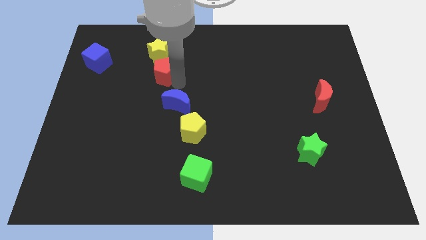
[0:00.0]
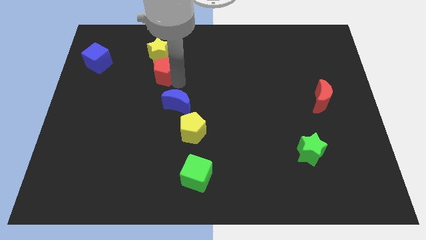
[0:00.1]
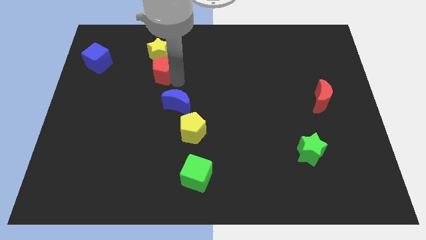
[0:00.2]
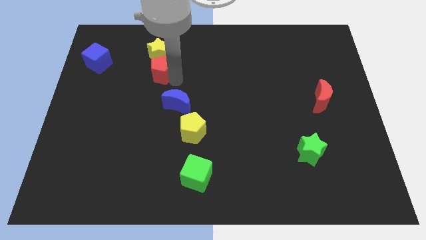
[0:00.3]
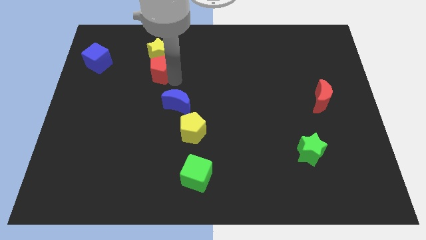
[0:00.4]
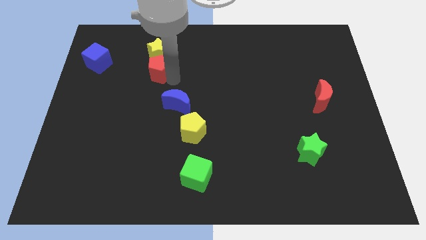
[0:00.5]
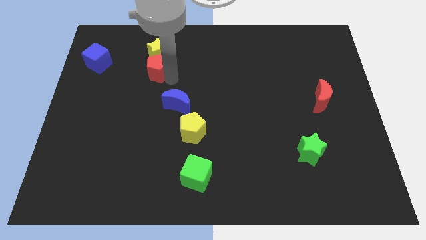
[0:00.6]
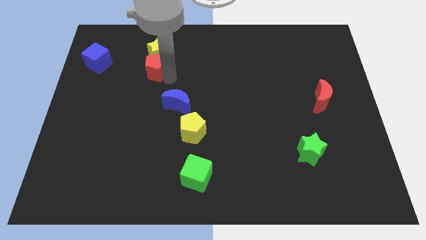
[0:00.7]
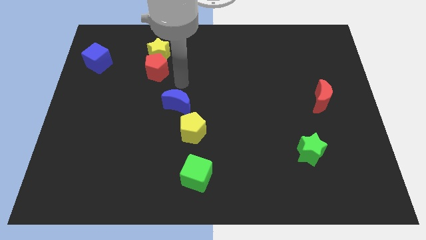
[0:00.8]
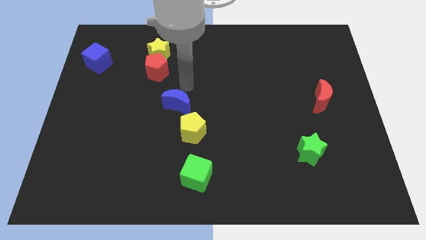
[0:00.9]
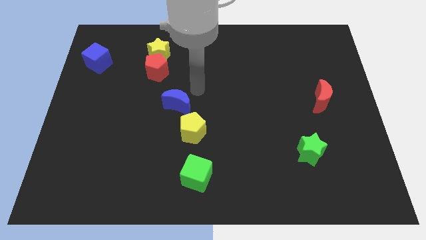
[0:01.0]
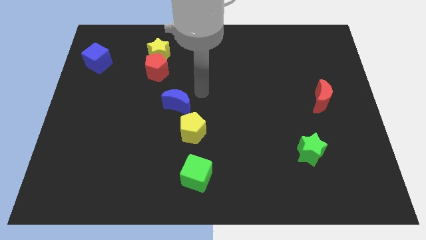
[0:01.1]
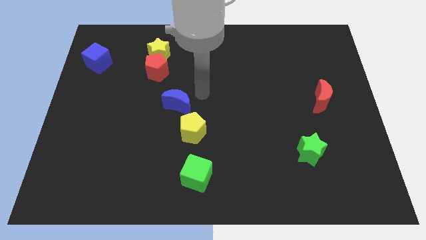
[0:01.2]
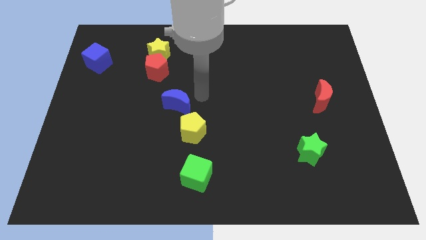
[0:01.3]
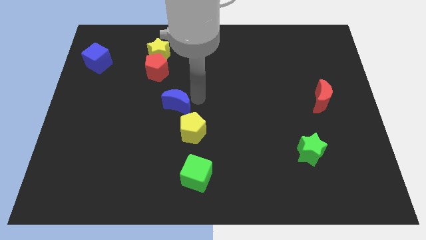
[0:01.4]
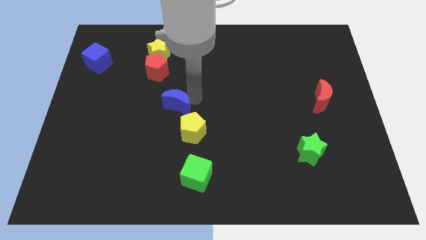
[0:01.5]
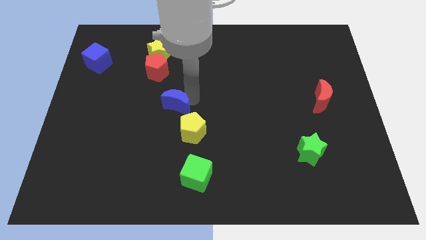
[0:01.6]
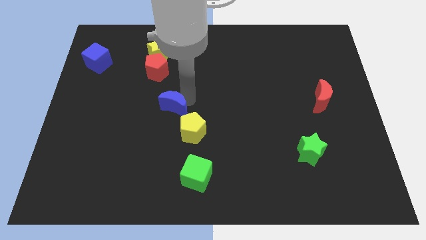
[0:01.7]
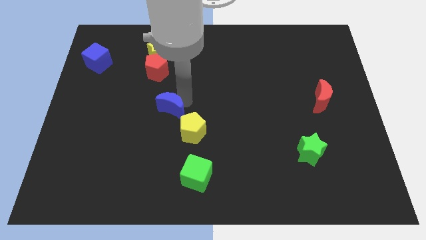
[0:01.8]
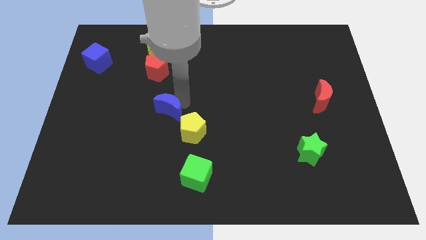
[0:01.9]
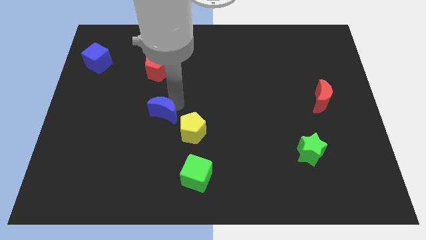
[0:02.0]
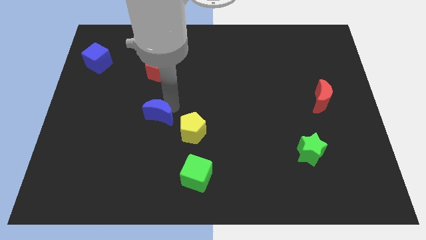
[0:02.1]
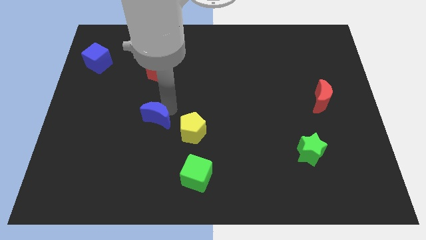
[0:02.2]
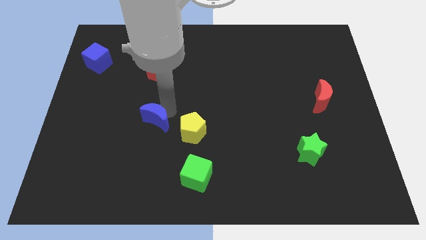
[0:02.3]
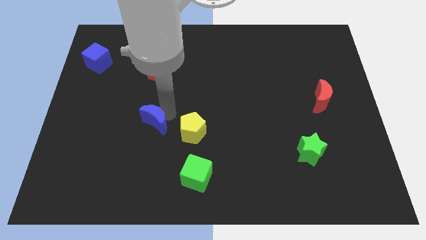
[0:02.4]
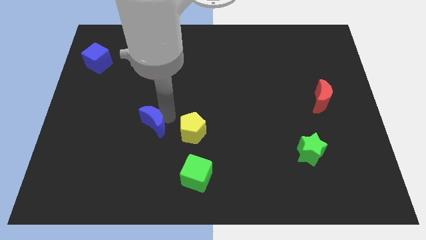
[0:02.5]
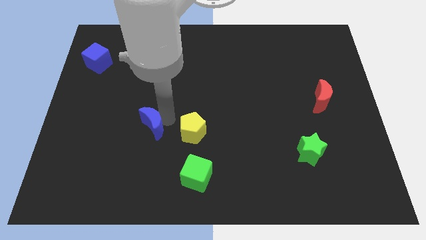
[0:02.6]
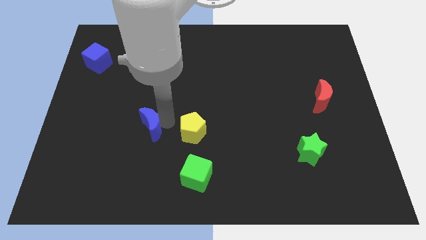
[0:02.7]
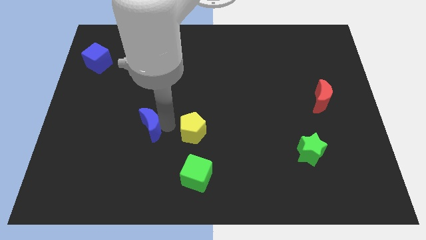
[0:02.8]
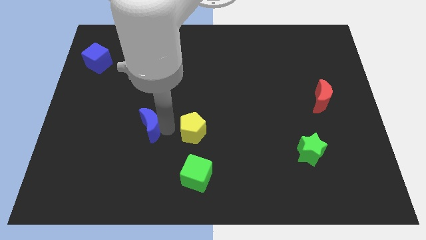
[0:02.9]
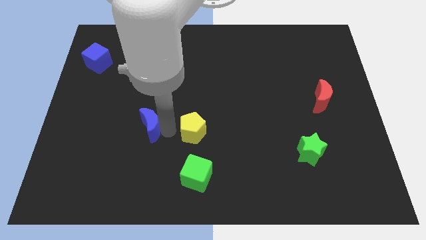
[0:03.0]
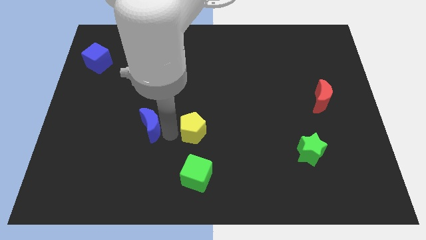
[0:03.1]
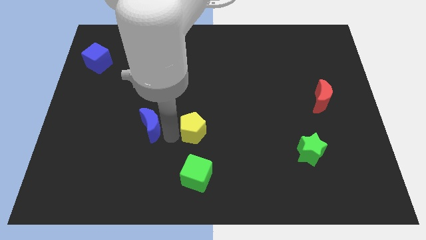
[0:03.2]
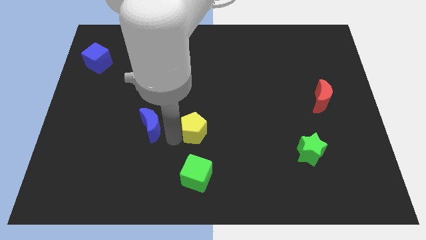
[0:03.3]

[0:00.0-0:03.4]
move the blue crescent towards the left bottom

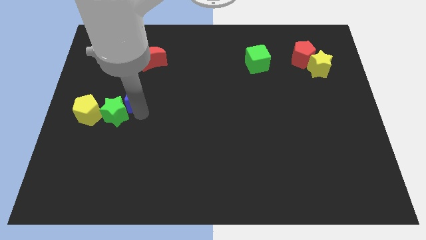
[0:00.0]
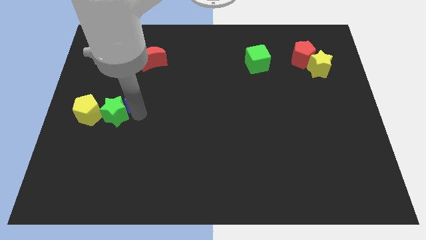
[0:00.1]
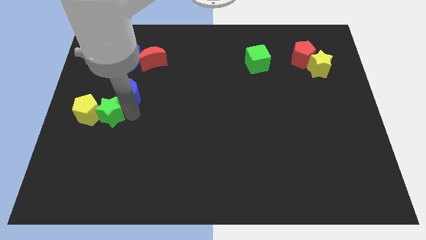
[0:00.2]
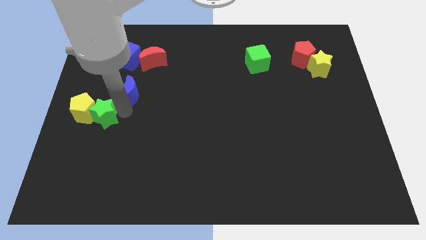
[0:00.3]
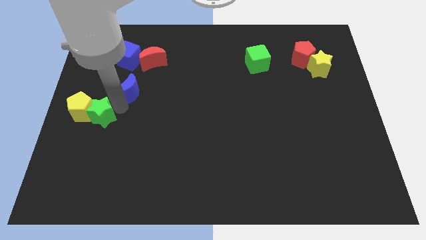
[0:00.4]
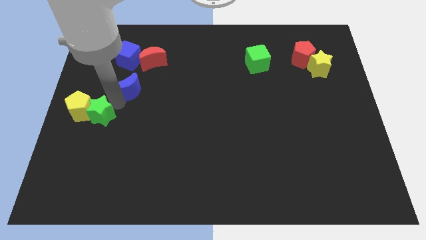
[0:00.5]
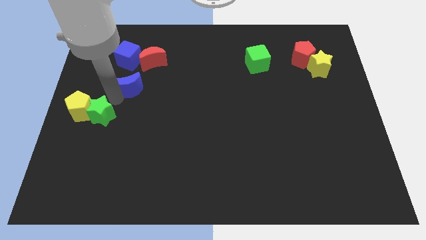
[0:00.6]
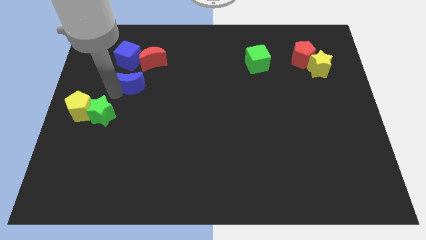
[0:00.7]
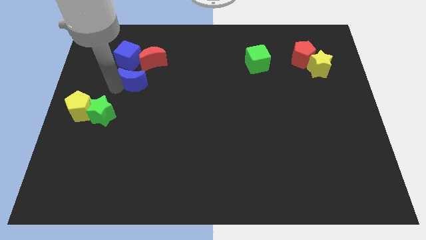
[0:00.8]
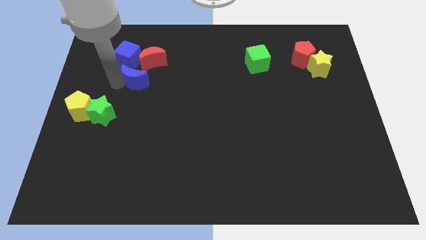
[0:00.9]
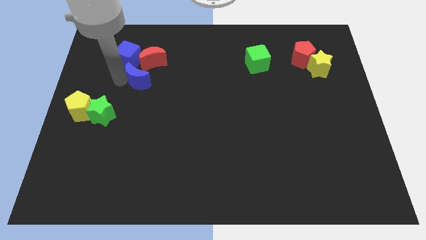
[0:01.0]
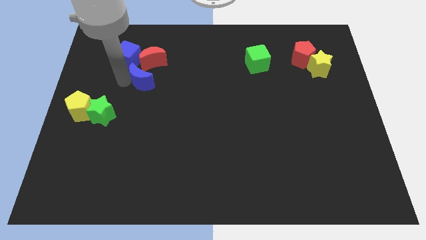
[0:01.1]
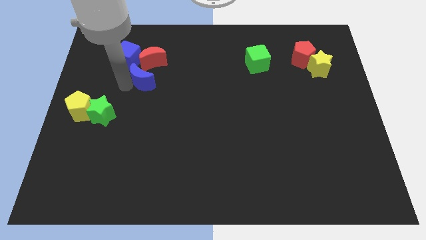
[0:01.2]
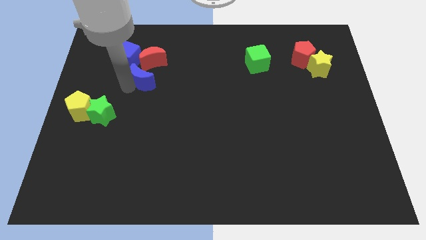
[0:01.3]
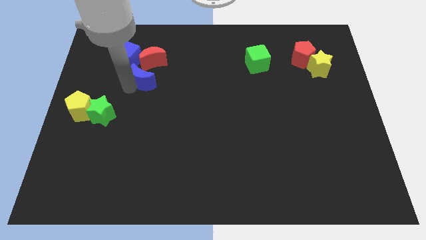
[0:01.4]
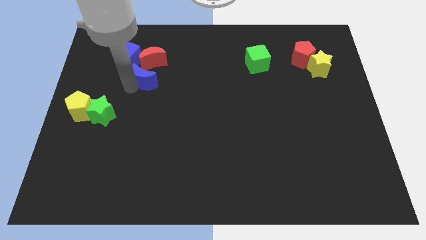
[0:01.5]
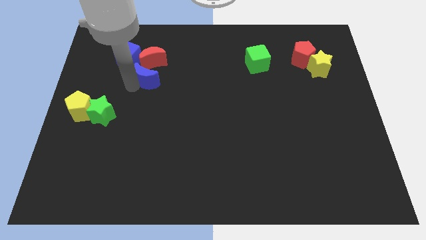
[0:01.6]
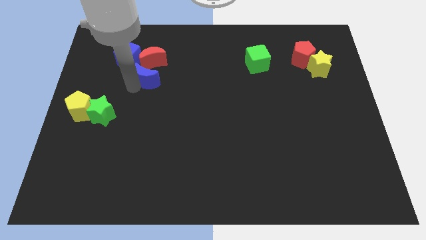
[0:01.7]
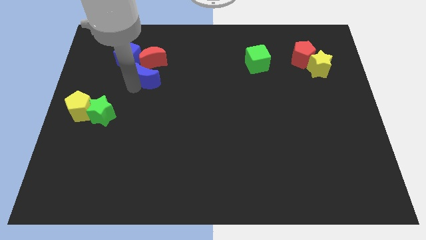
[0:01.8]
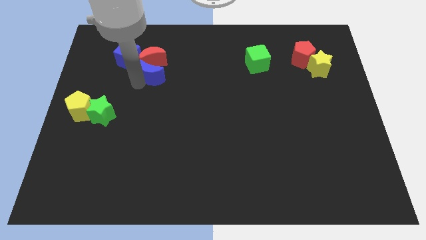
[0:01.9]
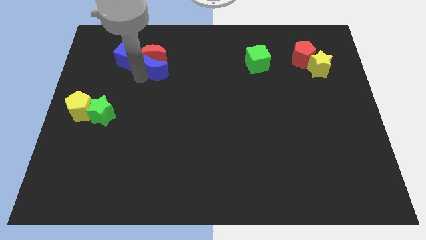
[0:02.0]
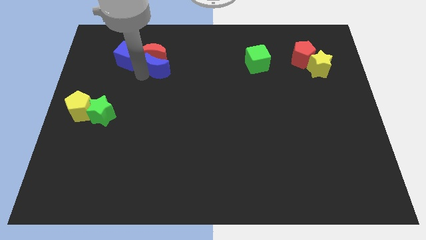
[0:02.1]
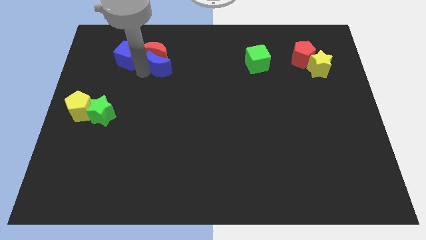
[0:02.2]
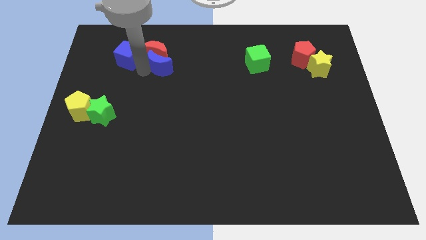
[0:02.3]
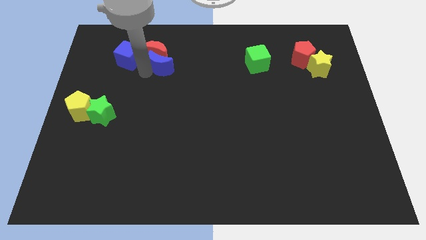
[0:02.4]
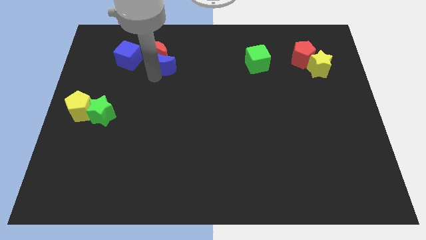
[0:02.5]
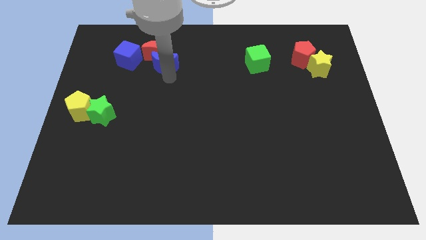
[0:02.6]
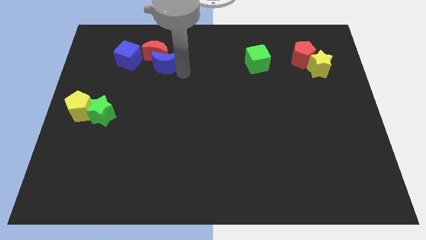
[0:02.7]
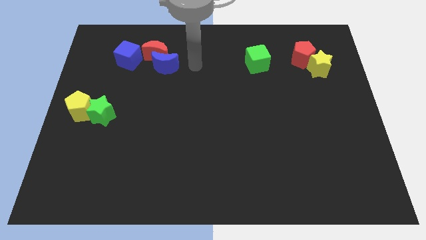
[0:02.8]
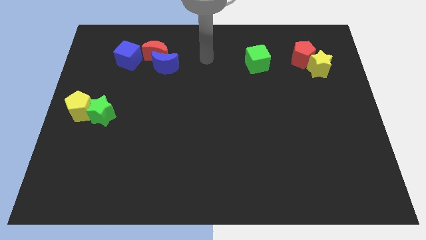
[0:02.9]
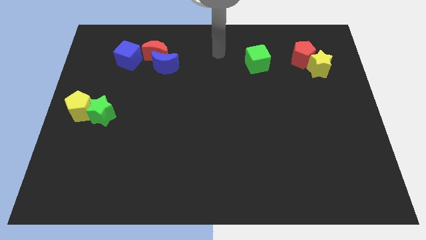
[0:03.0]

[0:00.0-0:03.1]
push blue moon in to red moon

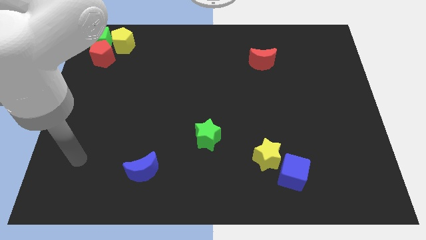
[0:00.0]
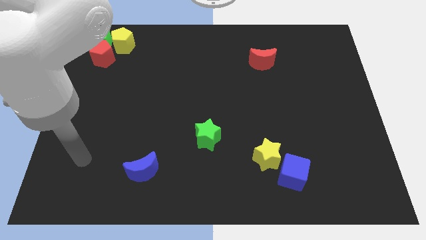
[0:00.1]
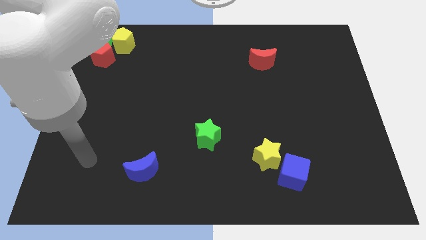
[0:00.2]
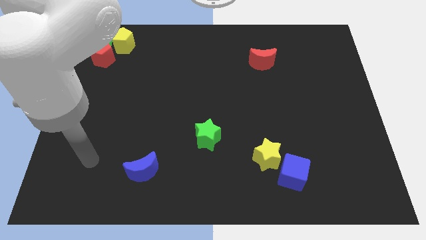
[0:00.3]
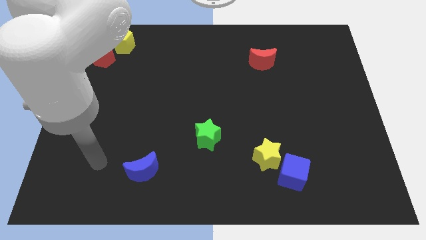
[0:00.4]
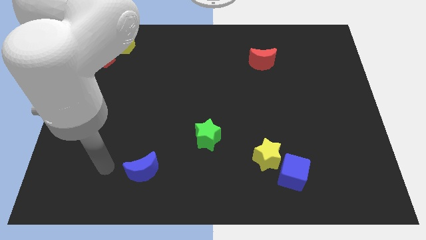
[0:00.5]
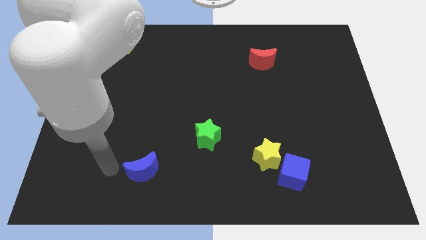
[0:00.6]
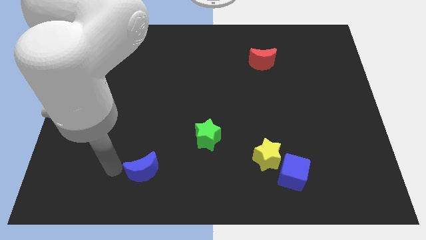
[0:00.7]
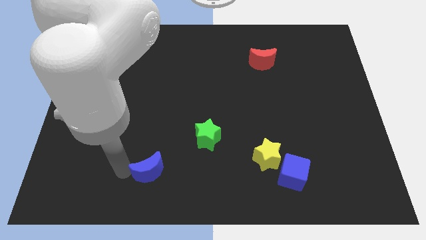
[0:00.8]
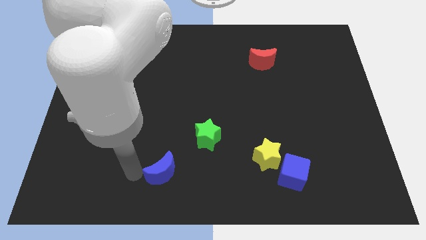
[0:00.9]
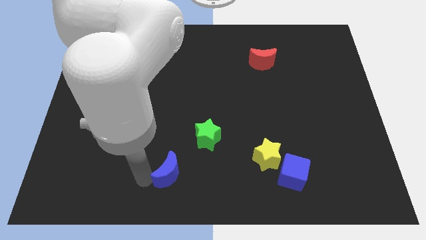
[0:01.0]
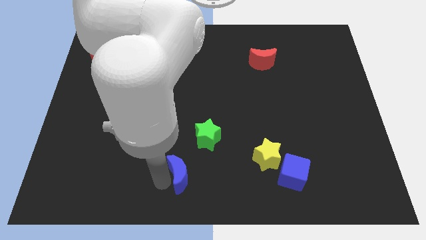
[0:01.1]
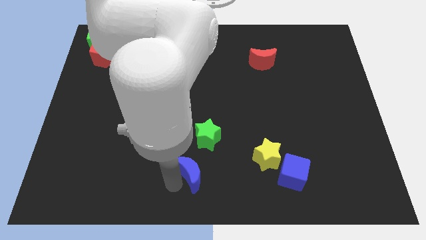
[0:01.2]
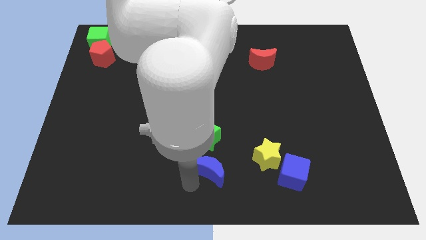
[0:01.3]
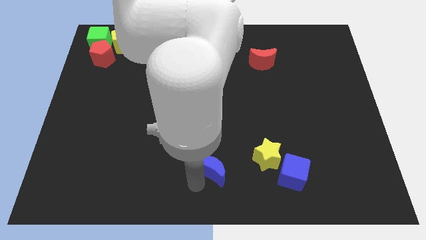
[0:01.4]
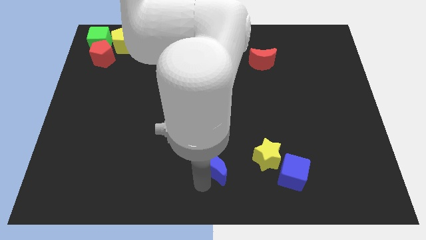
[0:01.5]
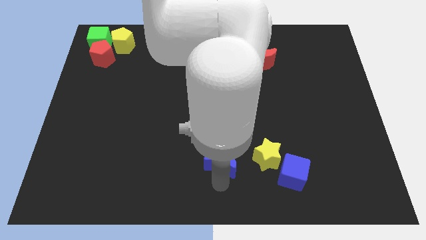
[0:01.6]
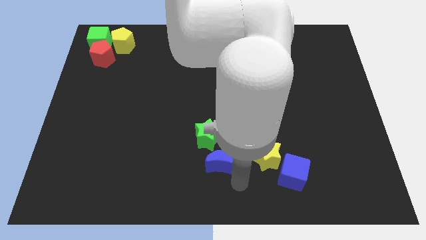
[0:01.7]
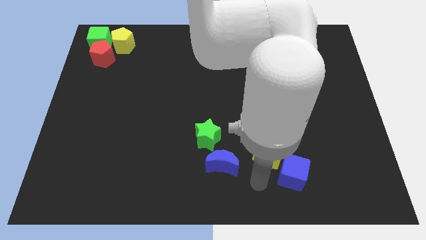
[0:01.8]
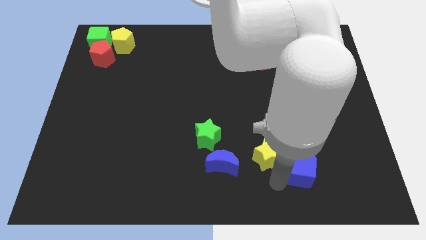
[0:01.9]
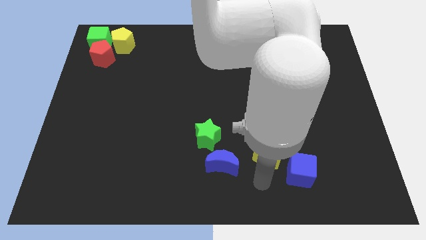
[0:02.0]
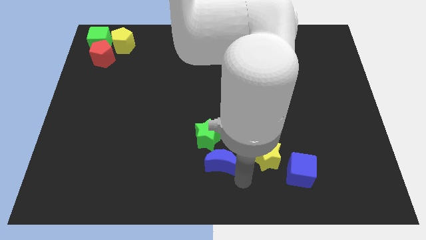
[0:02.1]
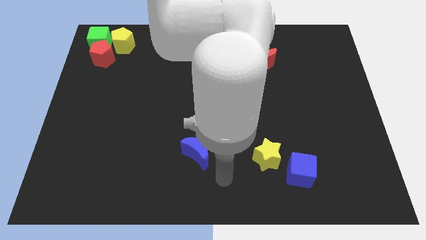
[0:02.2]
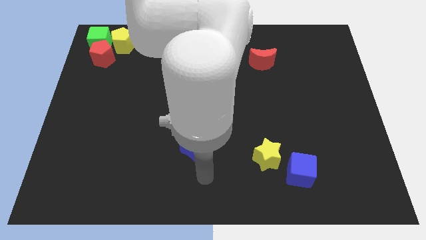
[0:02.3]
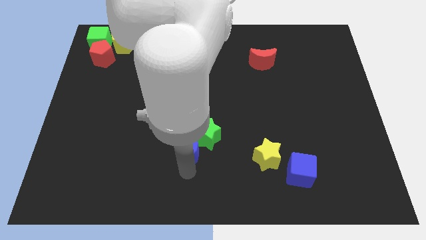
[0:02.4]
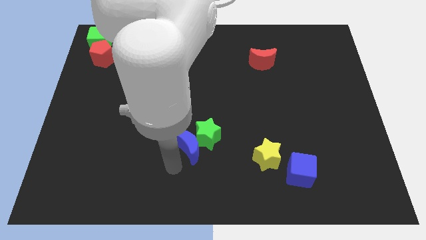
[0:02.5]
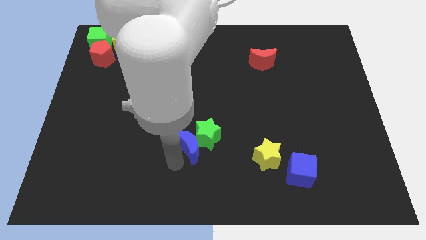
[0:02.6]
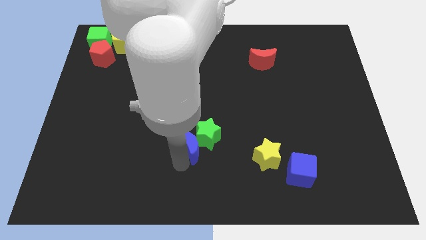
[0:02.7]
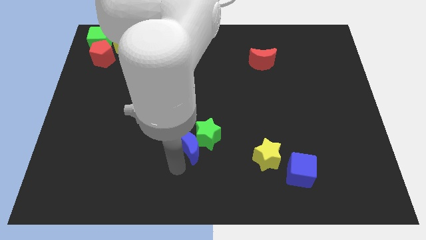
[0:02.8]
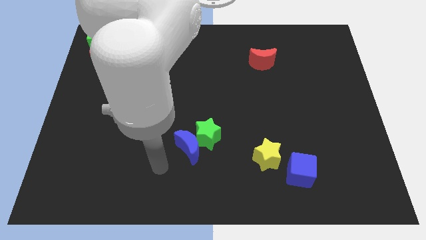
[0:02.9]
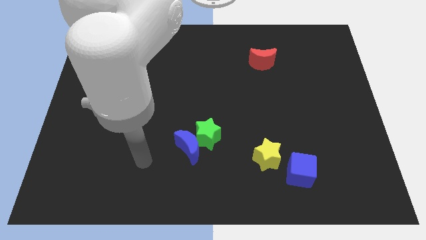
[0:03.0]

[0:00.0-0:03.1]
place the blue crescent towards the bottom left of the green star
